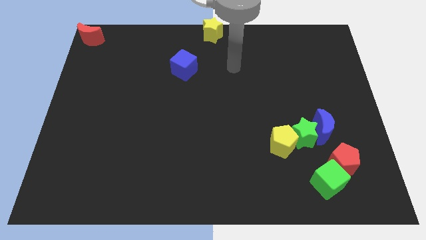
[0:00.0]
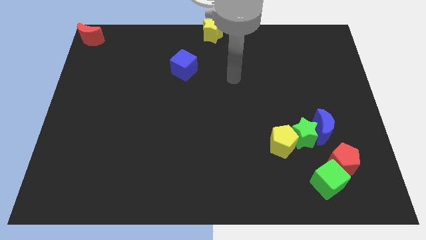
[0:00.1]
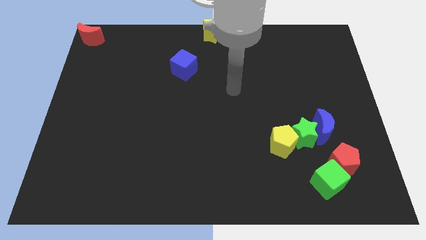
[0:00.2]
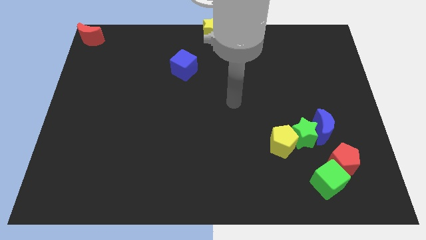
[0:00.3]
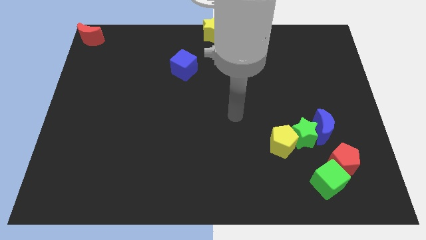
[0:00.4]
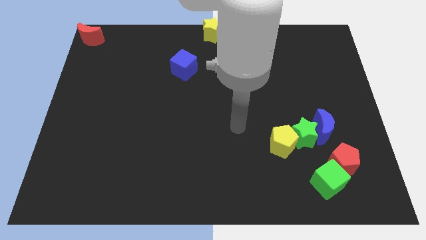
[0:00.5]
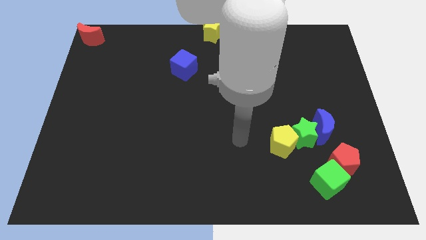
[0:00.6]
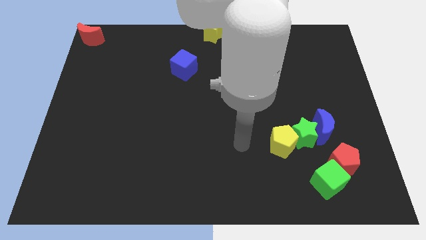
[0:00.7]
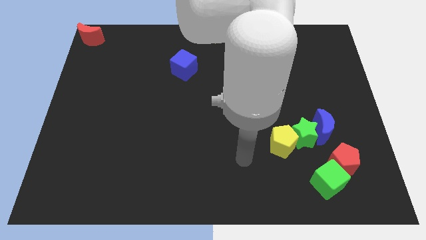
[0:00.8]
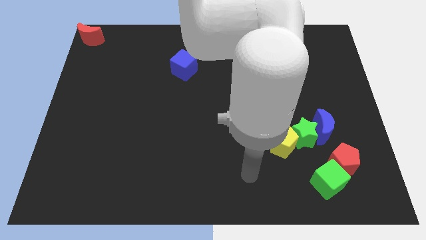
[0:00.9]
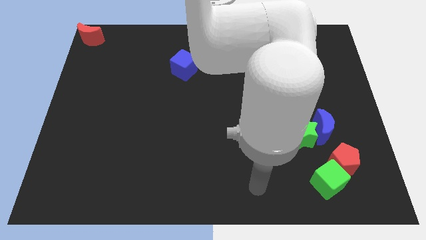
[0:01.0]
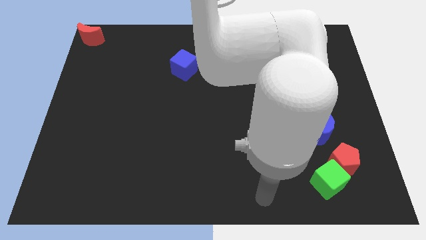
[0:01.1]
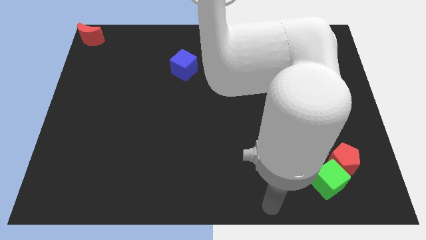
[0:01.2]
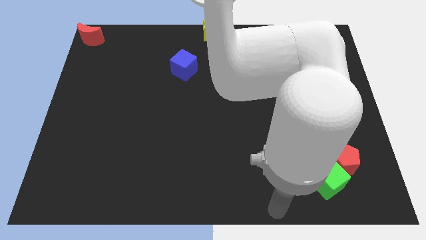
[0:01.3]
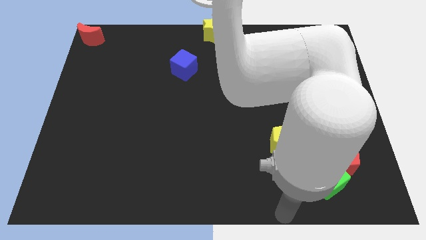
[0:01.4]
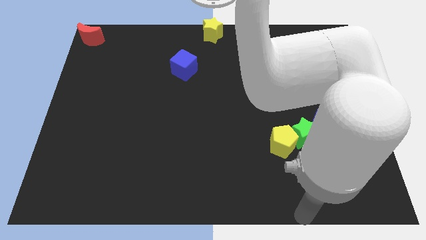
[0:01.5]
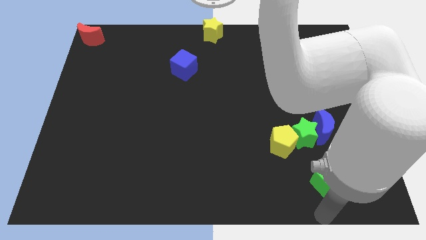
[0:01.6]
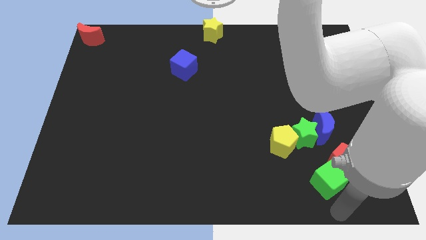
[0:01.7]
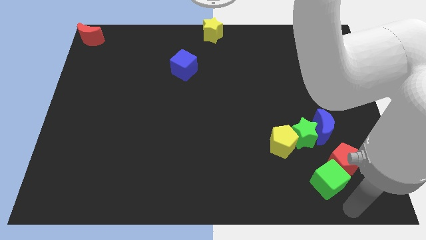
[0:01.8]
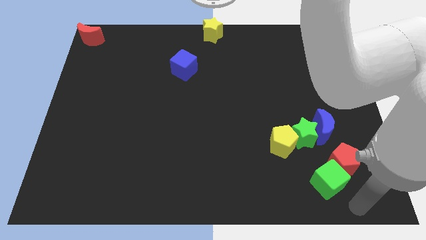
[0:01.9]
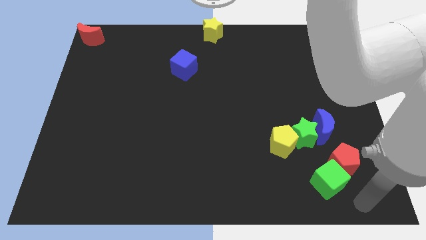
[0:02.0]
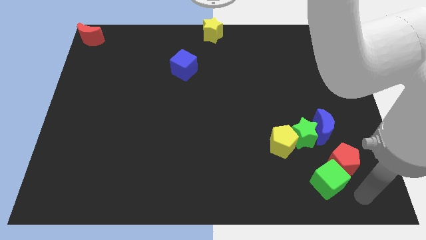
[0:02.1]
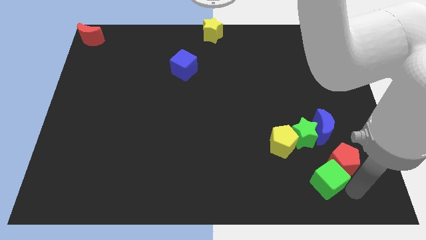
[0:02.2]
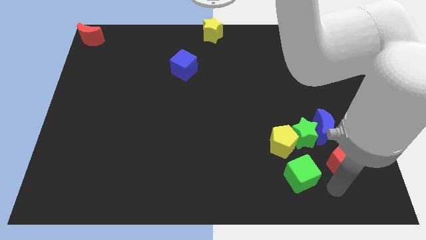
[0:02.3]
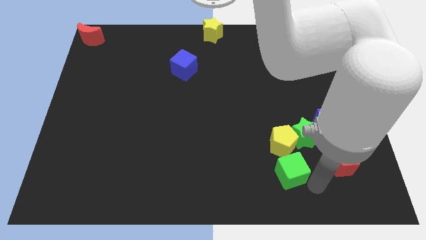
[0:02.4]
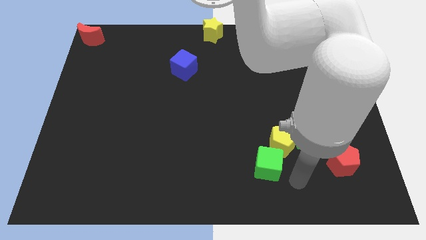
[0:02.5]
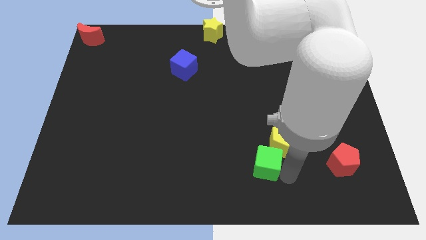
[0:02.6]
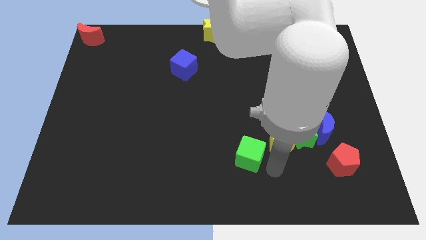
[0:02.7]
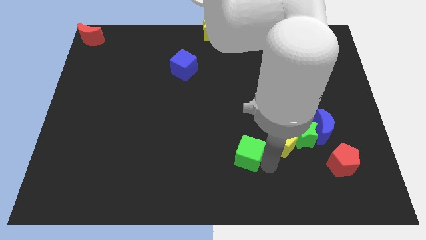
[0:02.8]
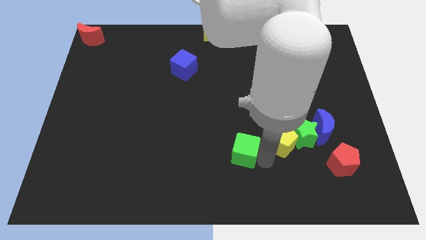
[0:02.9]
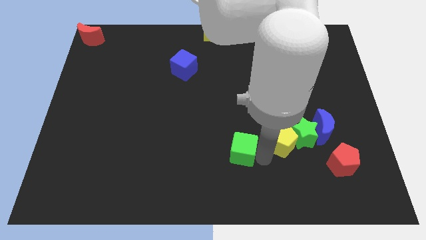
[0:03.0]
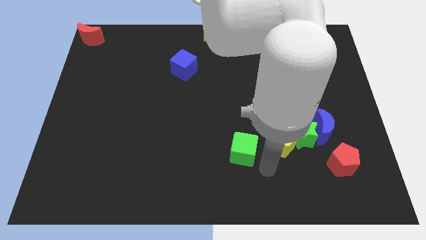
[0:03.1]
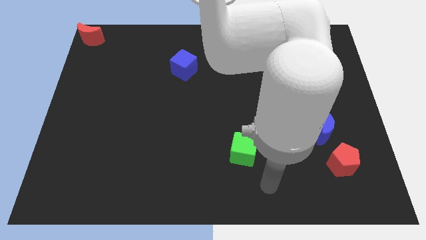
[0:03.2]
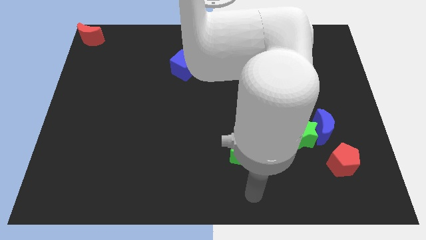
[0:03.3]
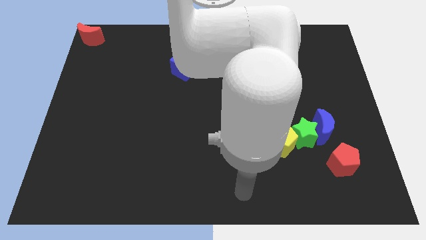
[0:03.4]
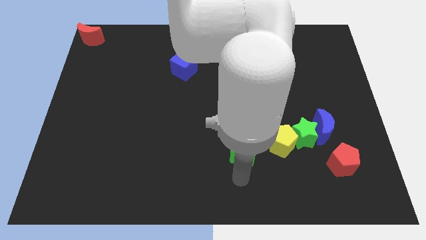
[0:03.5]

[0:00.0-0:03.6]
push the green cube to the left of the yellow pentagon

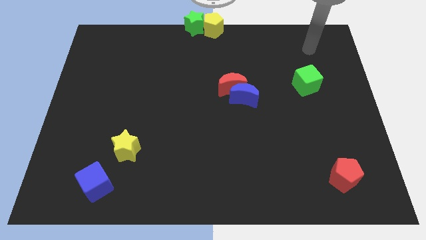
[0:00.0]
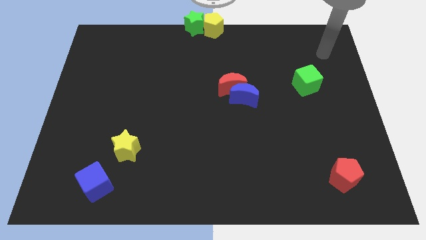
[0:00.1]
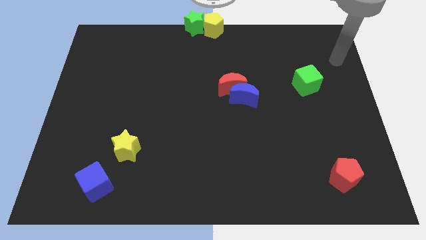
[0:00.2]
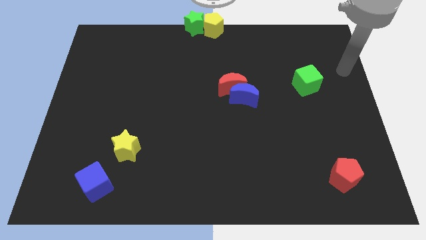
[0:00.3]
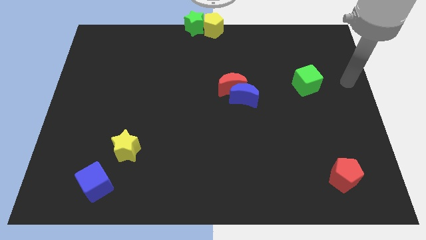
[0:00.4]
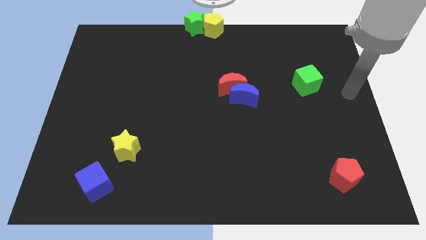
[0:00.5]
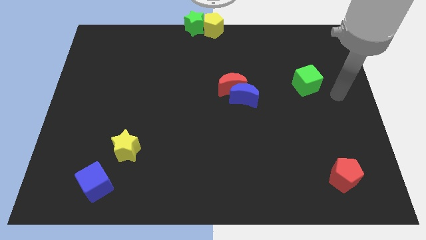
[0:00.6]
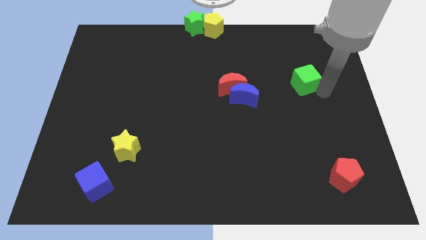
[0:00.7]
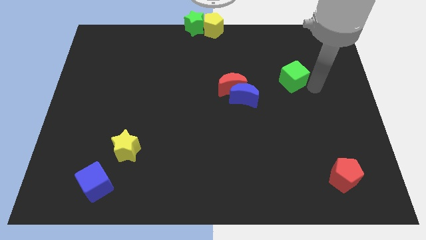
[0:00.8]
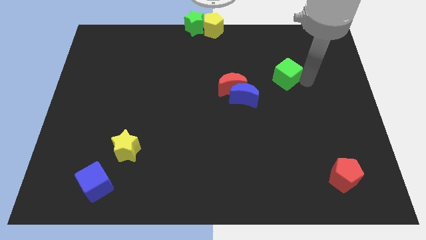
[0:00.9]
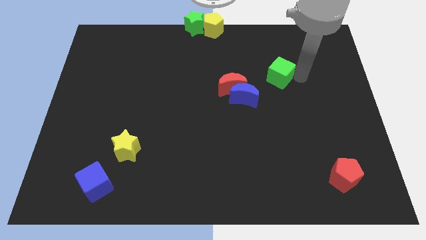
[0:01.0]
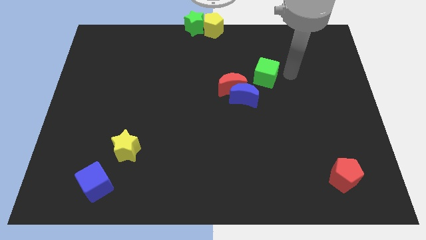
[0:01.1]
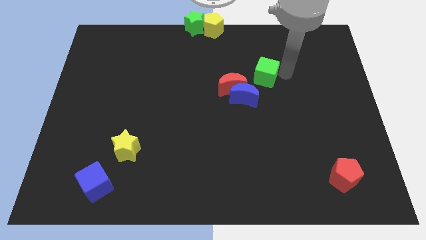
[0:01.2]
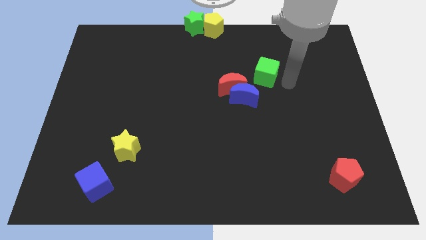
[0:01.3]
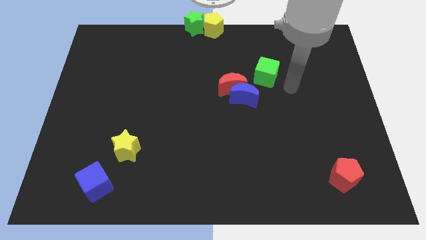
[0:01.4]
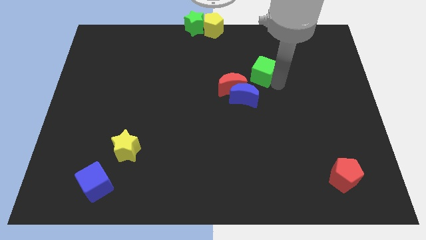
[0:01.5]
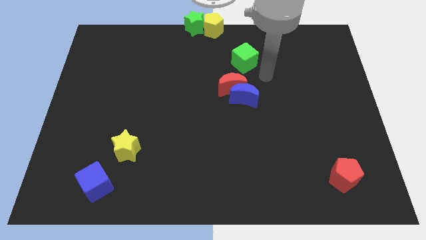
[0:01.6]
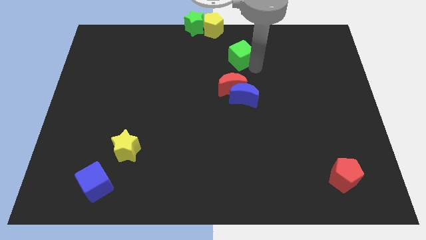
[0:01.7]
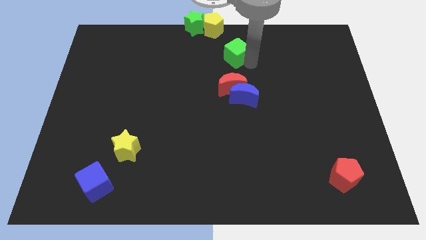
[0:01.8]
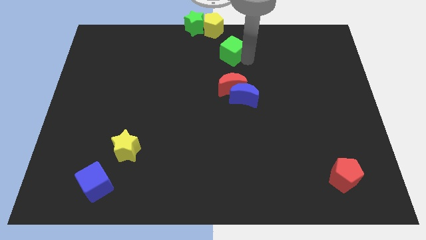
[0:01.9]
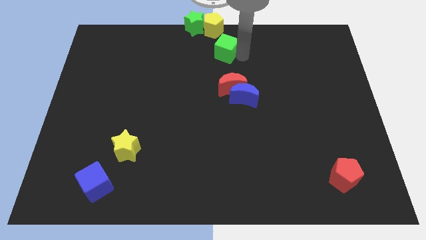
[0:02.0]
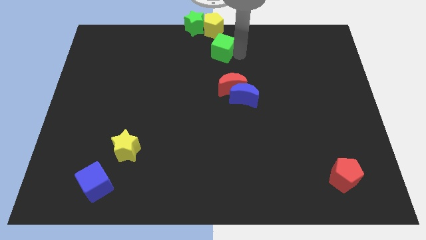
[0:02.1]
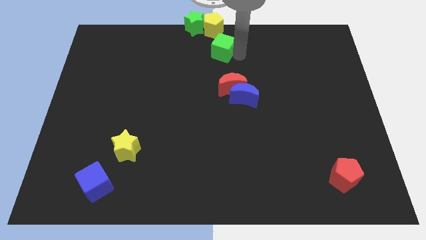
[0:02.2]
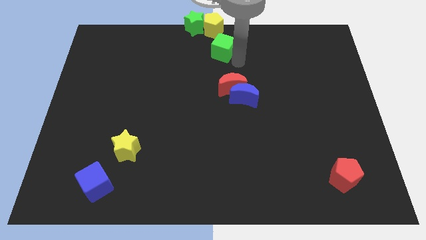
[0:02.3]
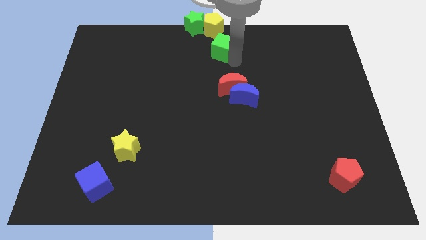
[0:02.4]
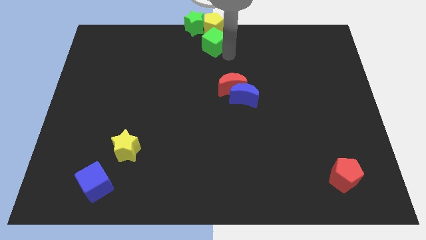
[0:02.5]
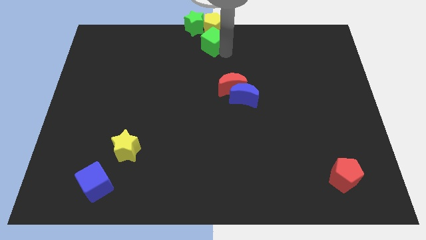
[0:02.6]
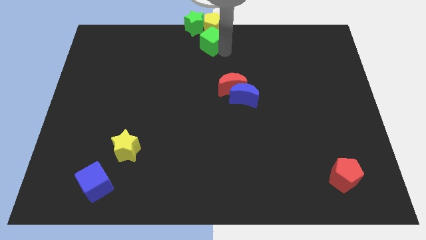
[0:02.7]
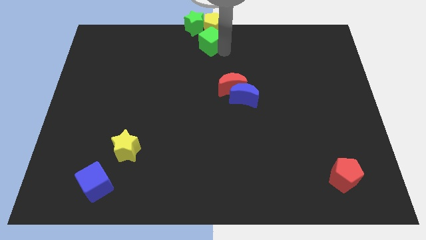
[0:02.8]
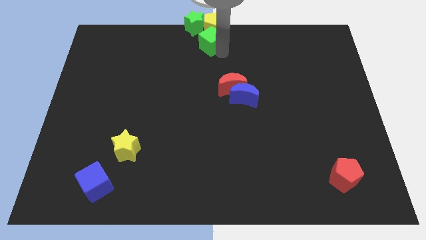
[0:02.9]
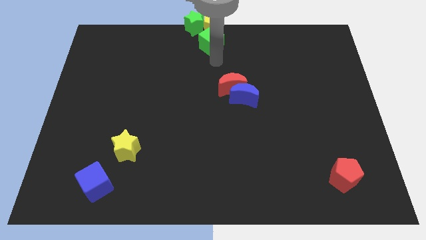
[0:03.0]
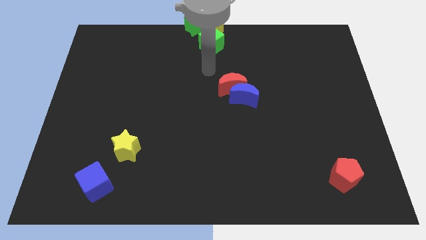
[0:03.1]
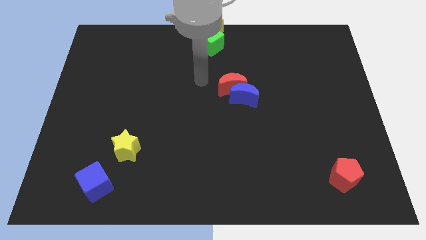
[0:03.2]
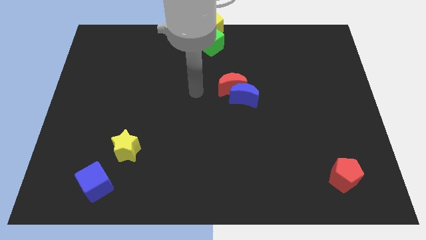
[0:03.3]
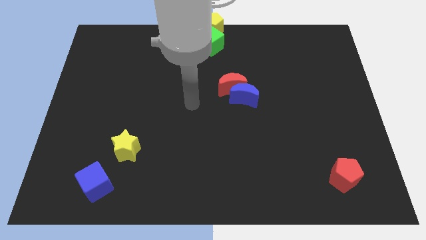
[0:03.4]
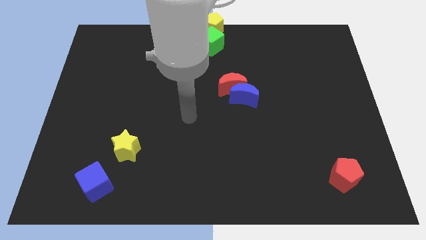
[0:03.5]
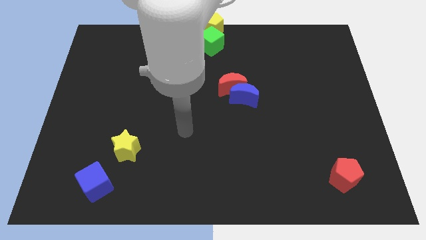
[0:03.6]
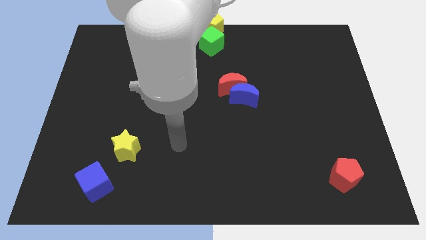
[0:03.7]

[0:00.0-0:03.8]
place the green cube below the yellow pentagon

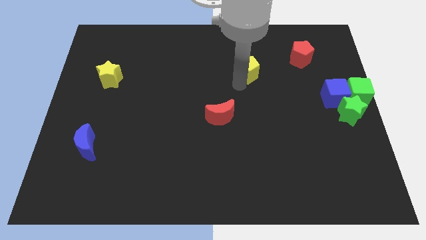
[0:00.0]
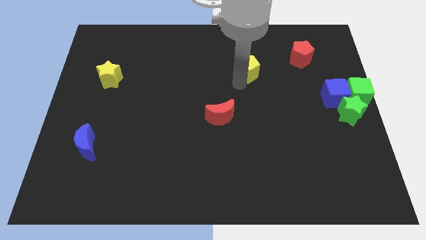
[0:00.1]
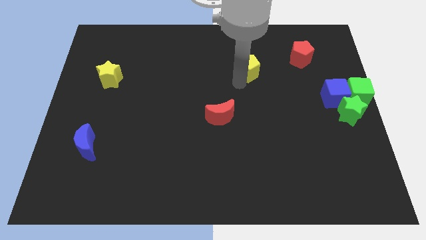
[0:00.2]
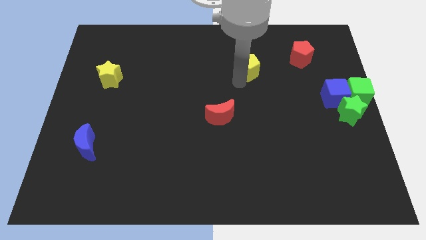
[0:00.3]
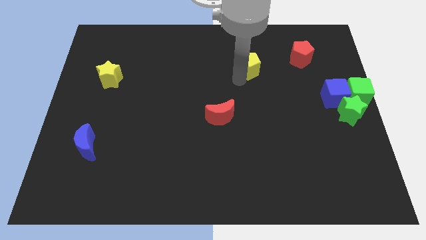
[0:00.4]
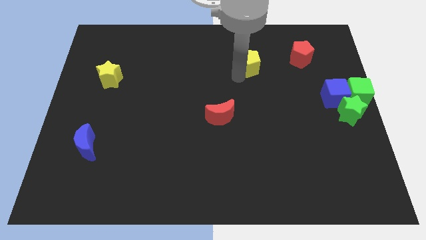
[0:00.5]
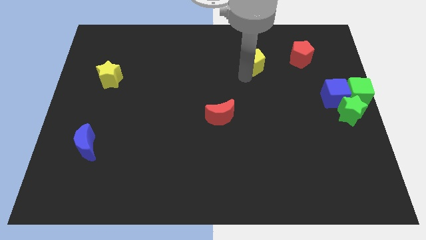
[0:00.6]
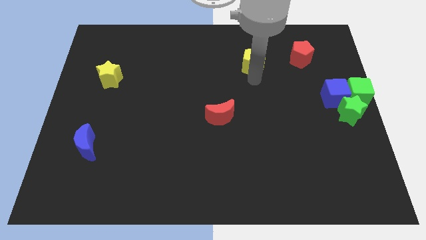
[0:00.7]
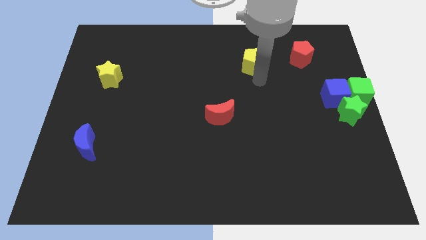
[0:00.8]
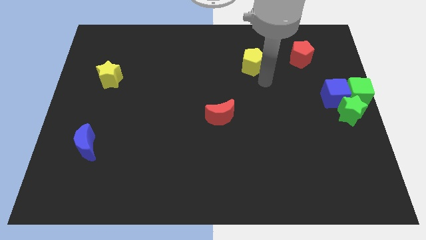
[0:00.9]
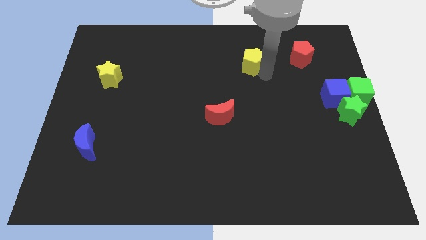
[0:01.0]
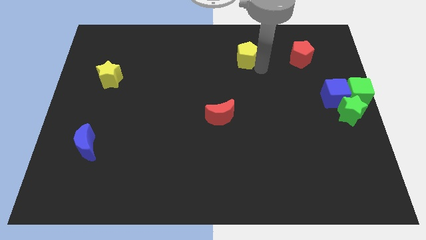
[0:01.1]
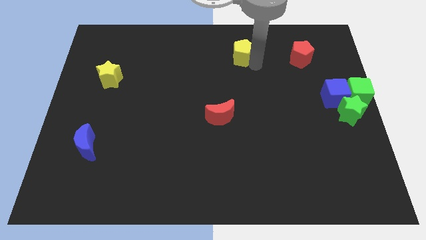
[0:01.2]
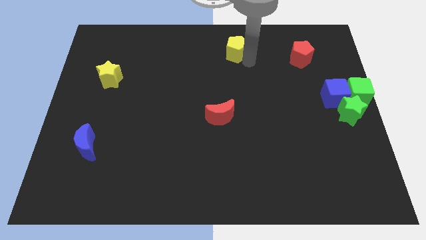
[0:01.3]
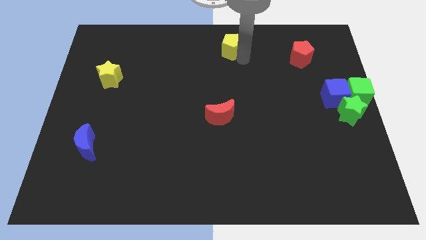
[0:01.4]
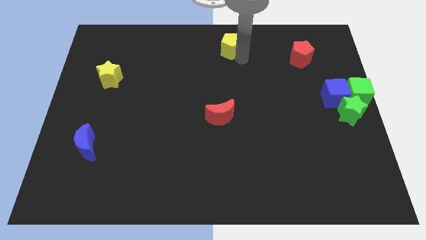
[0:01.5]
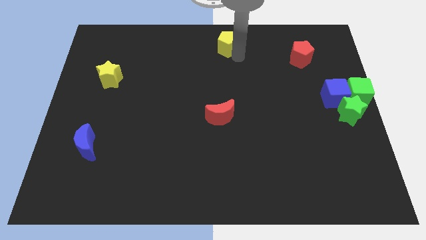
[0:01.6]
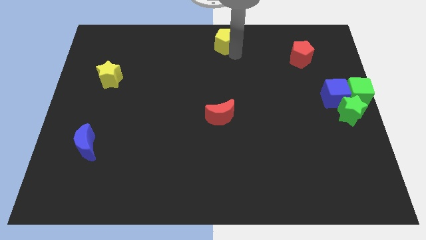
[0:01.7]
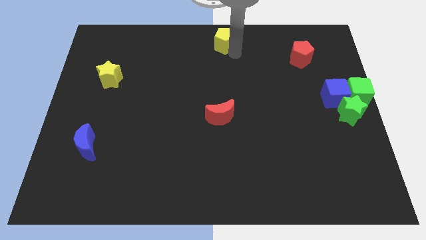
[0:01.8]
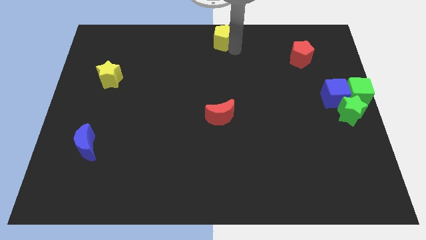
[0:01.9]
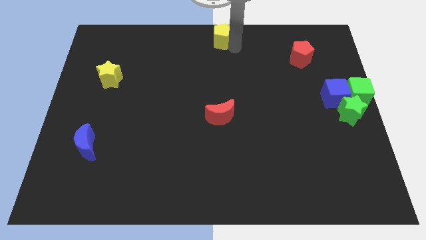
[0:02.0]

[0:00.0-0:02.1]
put the yellow pentagon at the top center of the board
